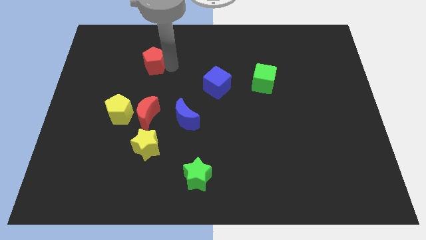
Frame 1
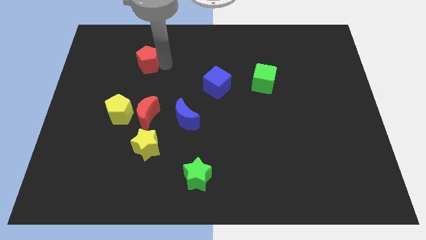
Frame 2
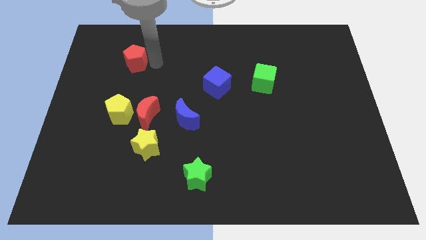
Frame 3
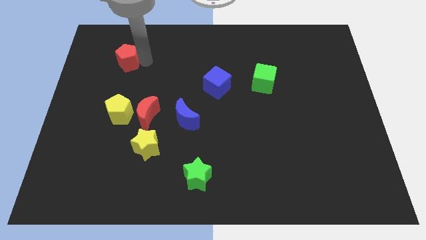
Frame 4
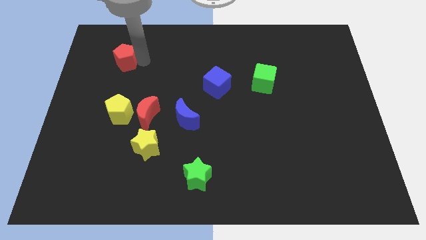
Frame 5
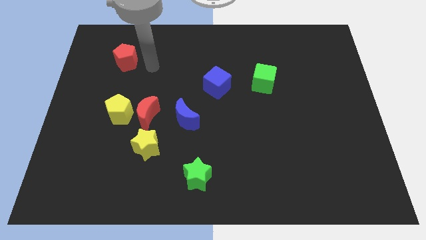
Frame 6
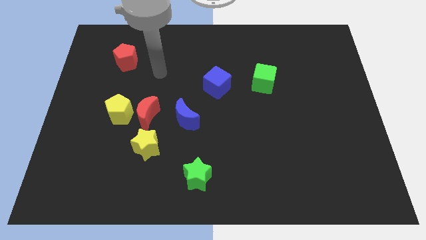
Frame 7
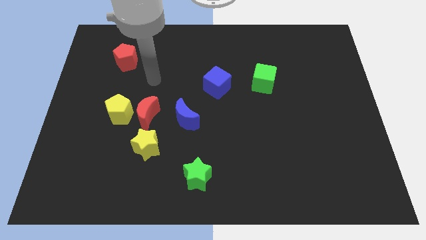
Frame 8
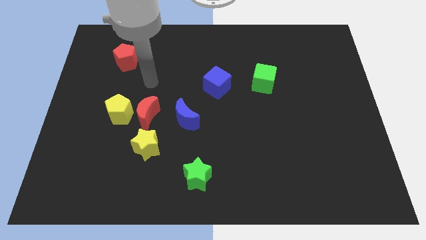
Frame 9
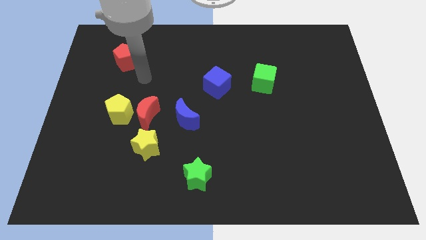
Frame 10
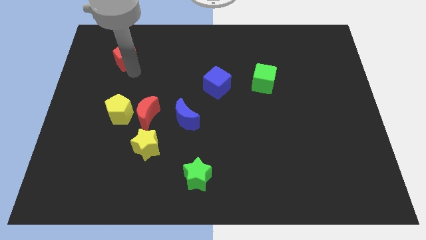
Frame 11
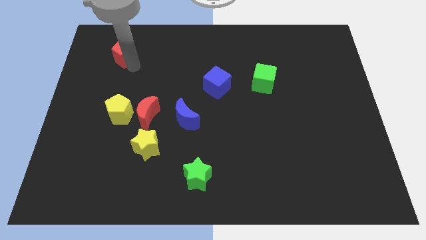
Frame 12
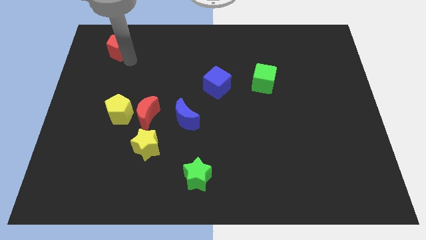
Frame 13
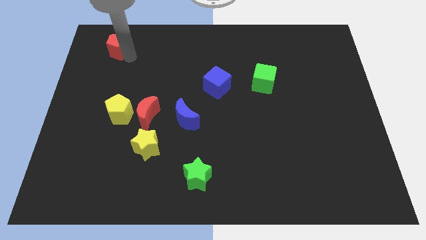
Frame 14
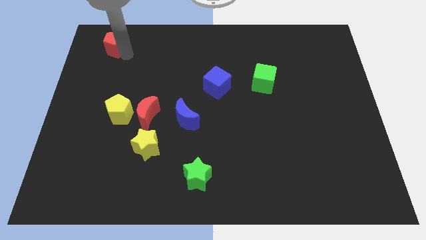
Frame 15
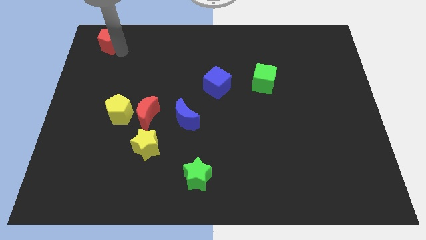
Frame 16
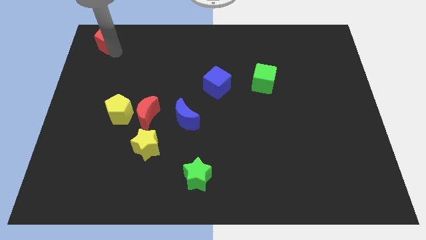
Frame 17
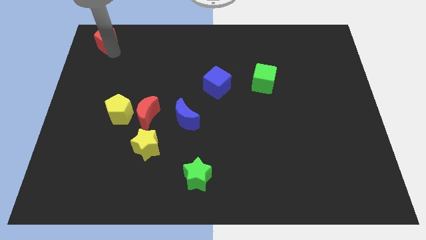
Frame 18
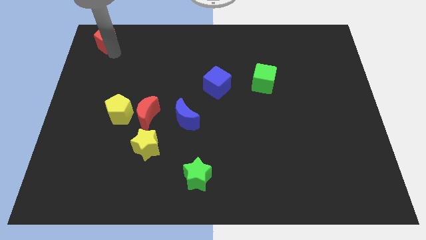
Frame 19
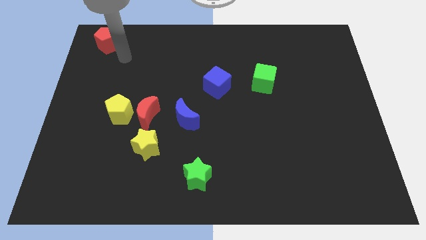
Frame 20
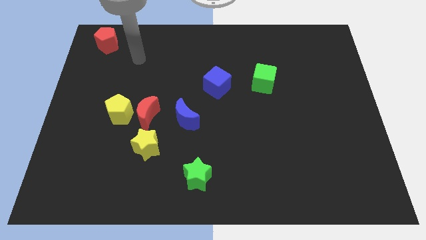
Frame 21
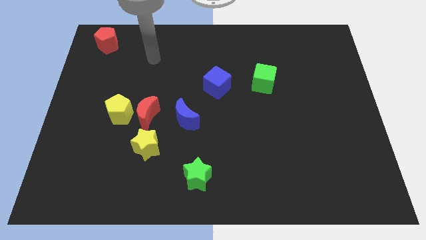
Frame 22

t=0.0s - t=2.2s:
push the red pentagon towards the top left

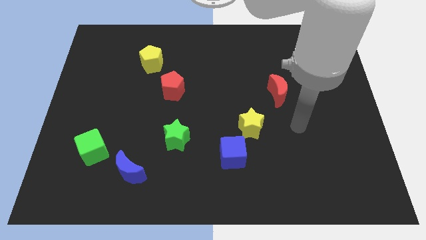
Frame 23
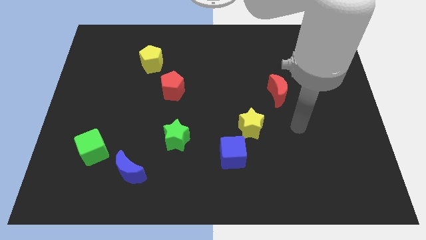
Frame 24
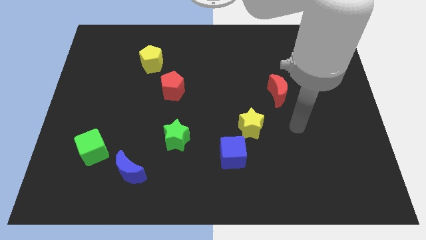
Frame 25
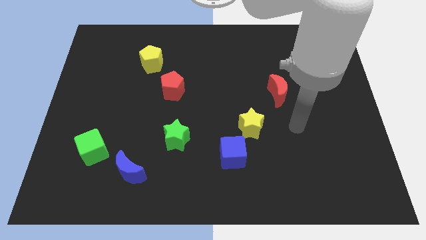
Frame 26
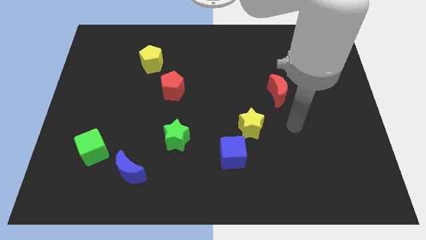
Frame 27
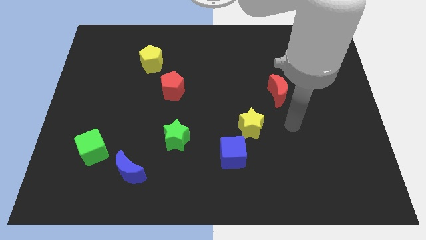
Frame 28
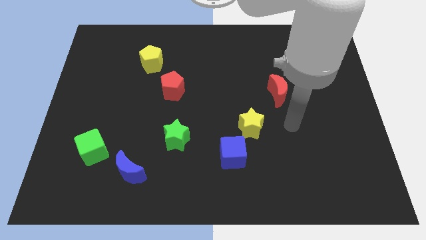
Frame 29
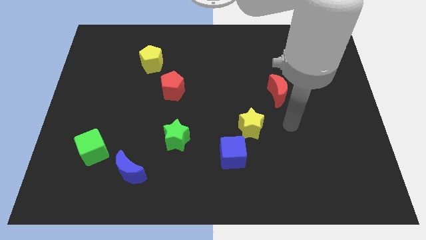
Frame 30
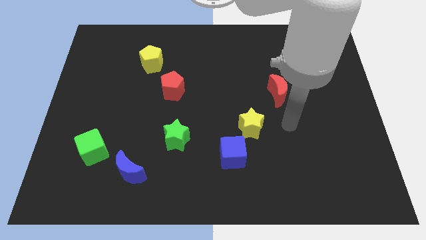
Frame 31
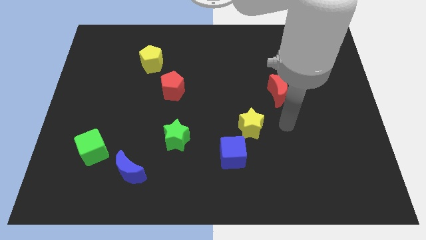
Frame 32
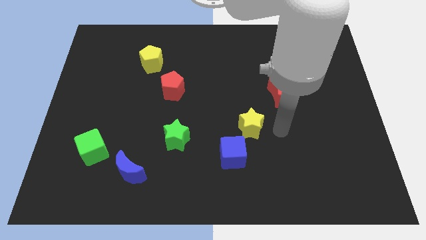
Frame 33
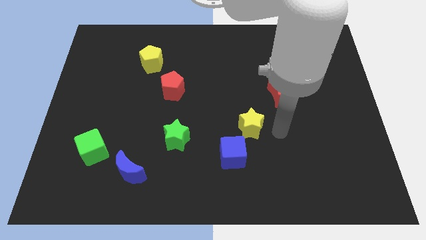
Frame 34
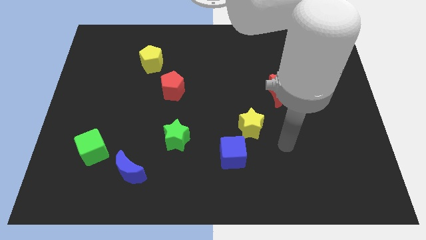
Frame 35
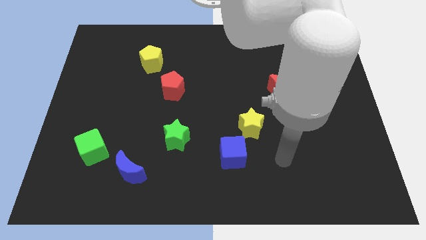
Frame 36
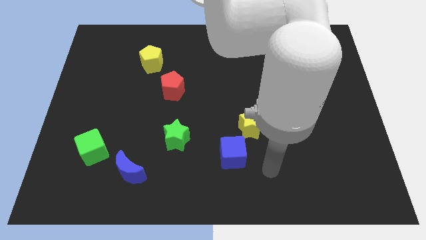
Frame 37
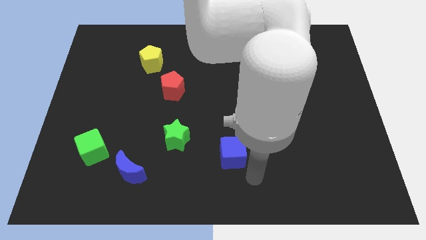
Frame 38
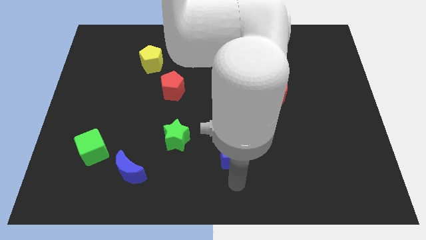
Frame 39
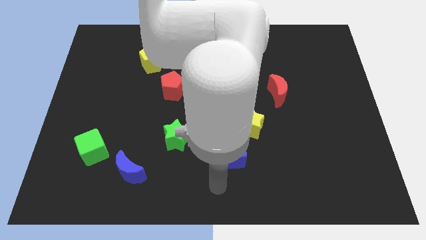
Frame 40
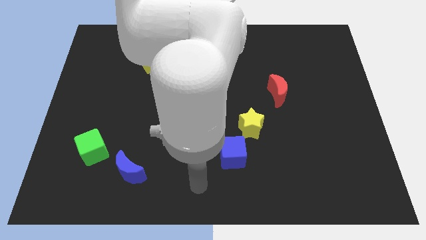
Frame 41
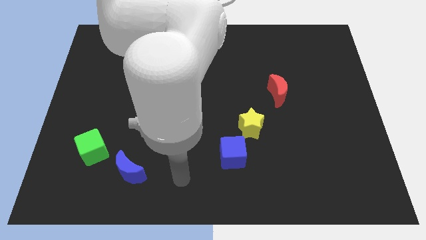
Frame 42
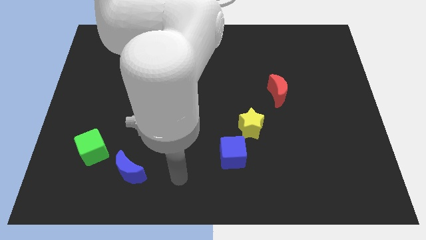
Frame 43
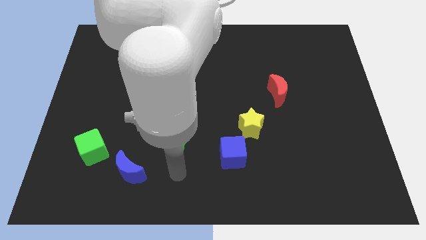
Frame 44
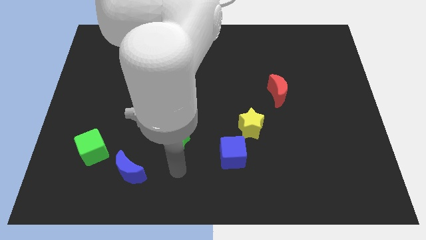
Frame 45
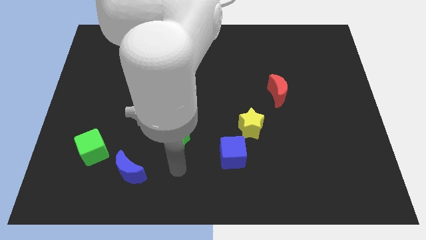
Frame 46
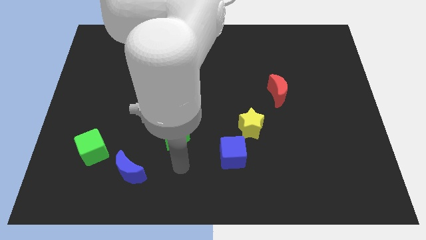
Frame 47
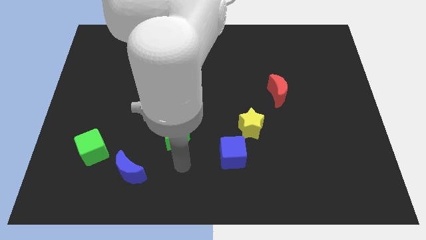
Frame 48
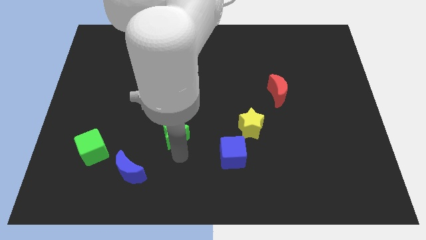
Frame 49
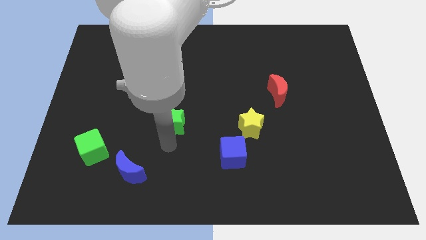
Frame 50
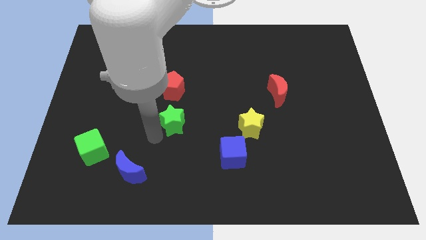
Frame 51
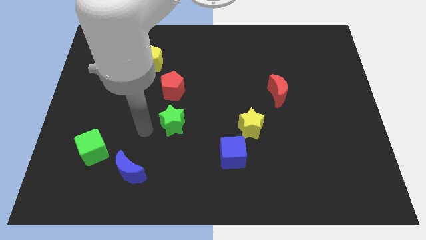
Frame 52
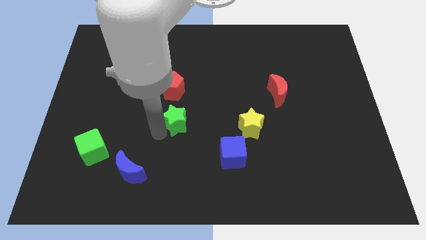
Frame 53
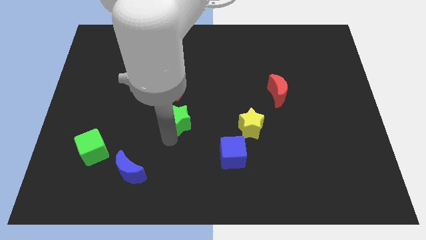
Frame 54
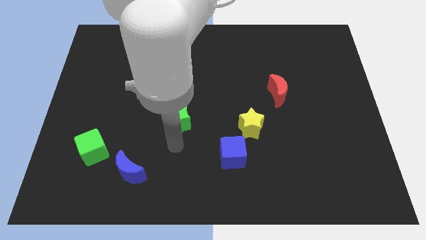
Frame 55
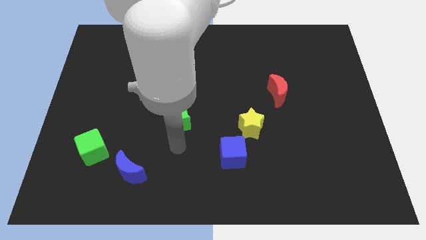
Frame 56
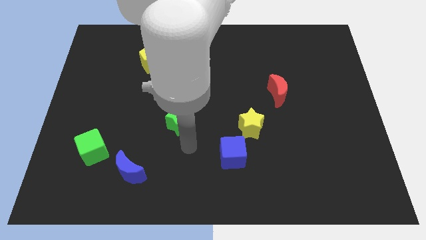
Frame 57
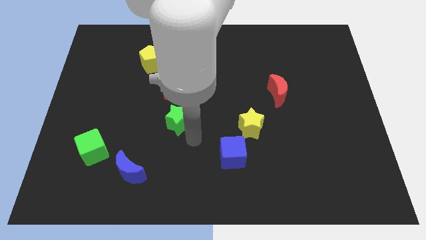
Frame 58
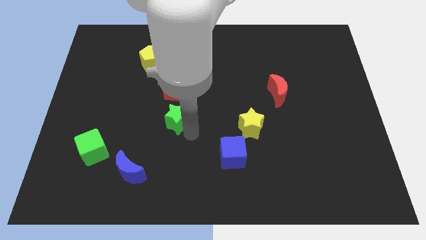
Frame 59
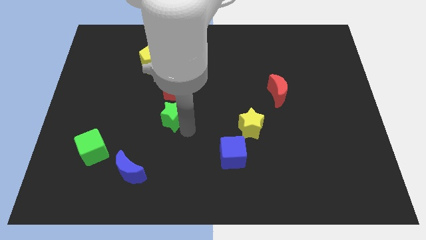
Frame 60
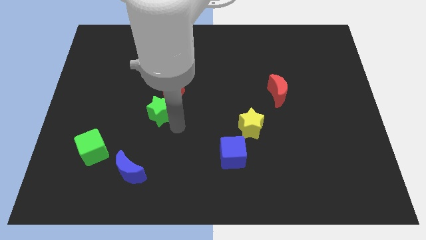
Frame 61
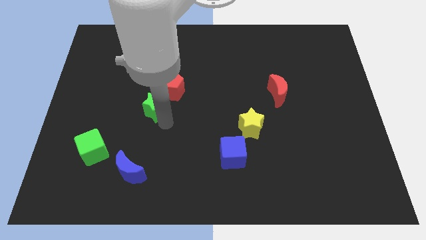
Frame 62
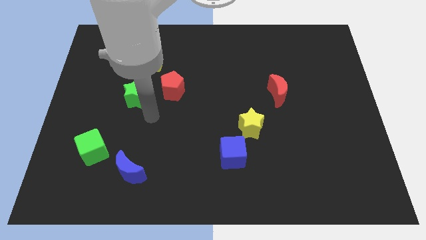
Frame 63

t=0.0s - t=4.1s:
place the green star left of red pentagon

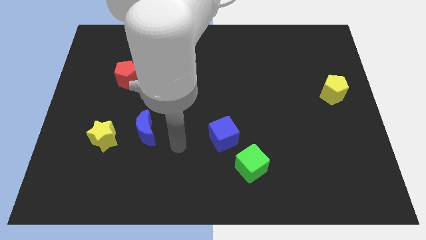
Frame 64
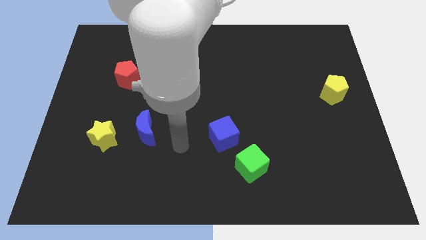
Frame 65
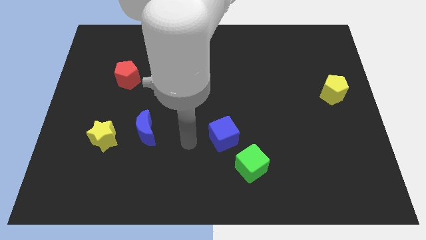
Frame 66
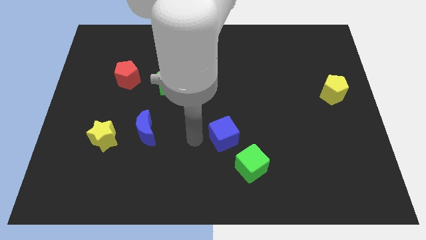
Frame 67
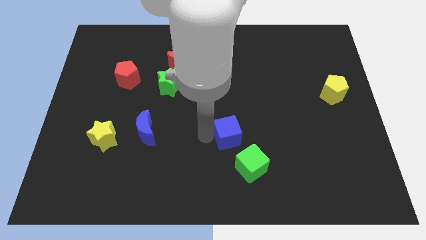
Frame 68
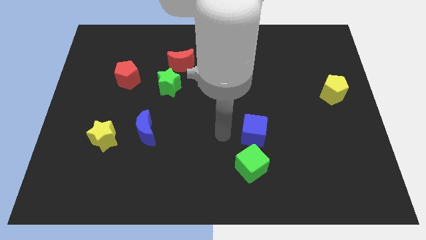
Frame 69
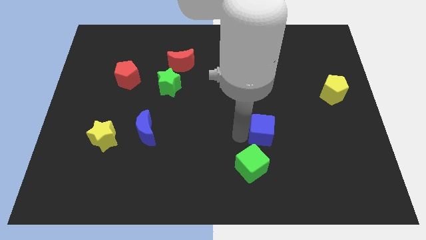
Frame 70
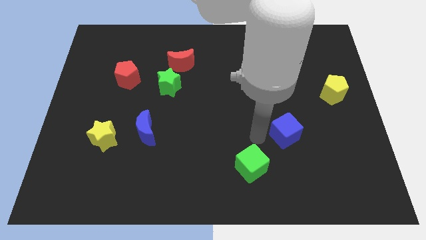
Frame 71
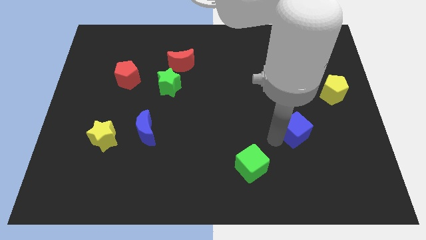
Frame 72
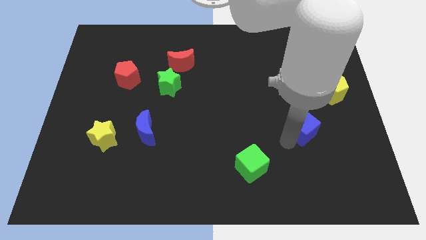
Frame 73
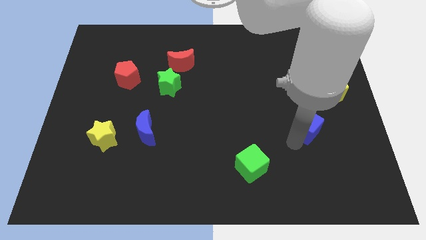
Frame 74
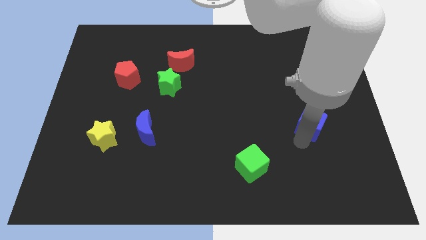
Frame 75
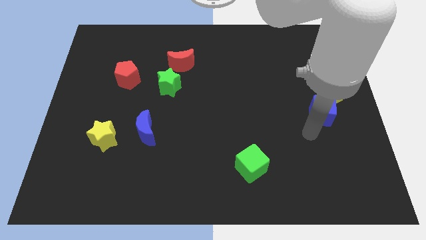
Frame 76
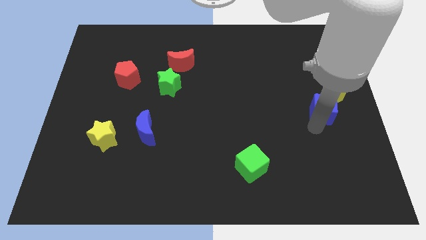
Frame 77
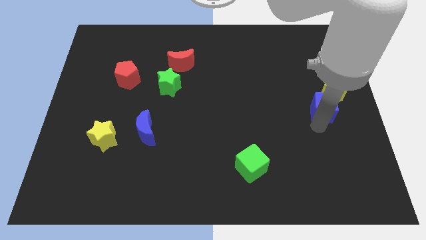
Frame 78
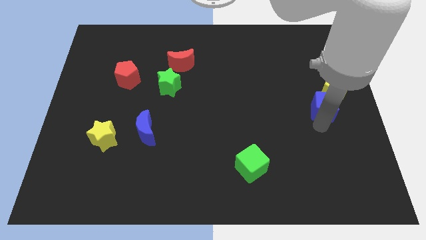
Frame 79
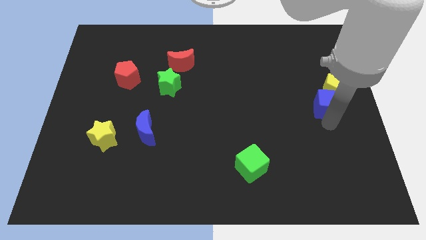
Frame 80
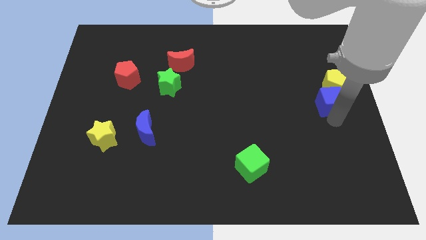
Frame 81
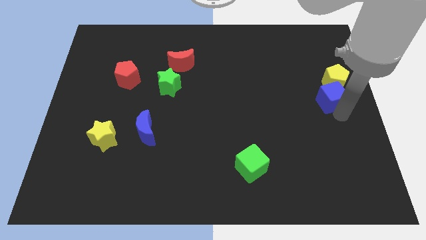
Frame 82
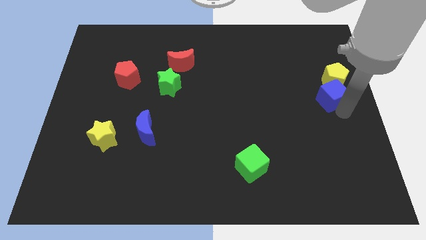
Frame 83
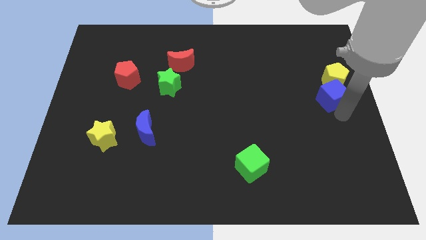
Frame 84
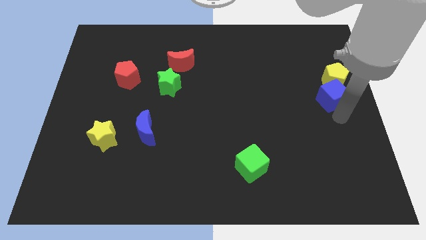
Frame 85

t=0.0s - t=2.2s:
push blue cube into yellow pentagon

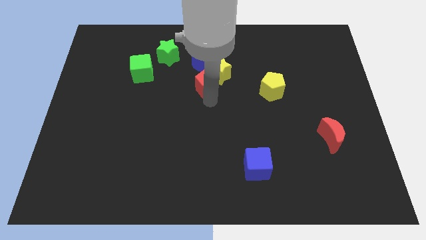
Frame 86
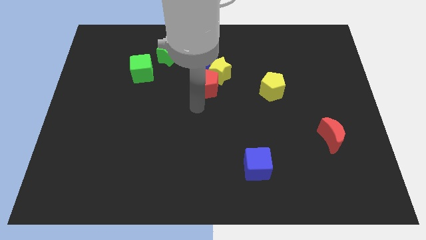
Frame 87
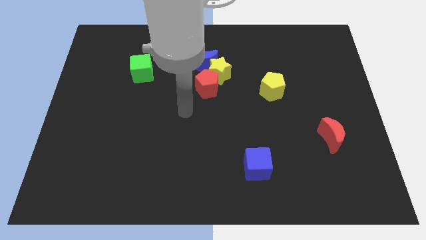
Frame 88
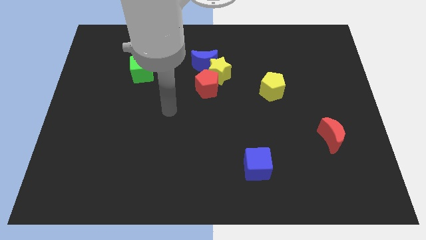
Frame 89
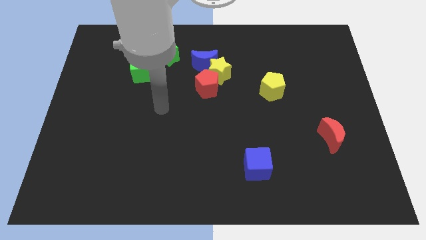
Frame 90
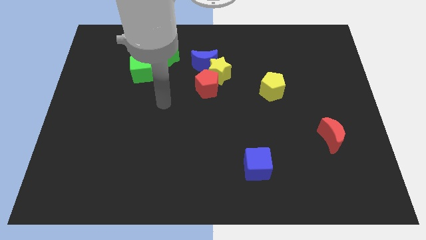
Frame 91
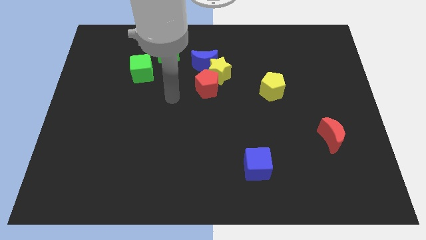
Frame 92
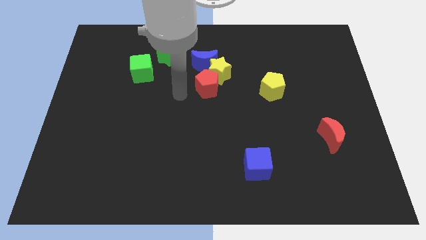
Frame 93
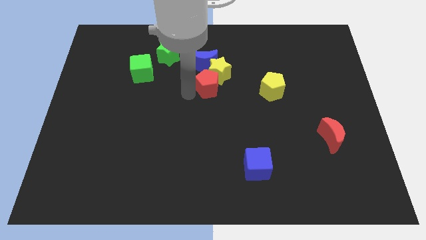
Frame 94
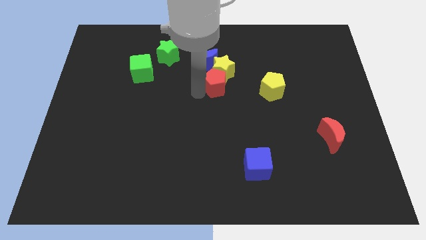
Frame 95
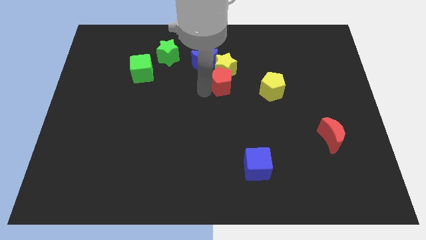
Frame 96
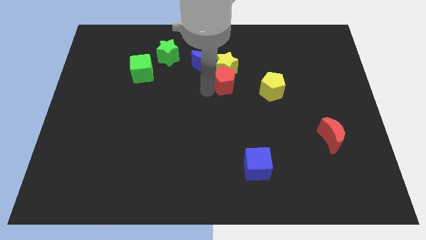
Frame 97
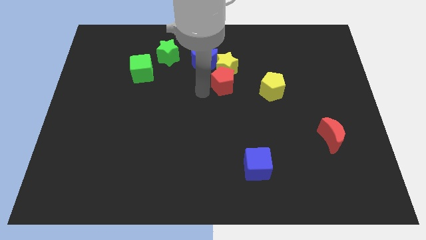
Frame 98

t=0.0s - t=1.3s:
move the red pentagon to the bottom of the yellow star
